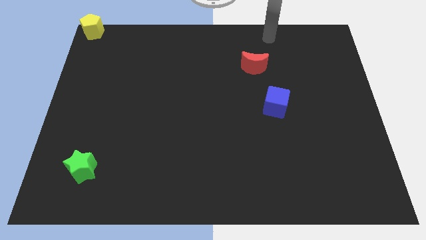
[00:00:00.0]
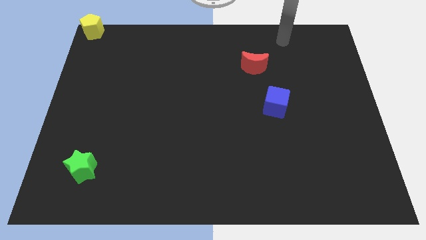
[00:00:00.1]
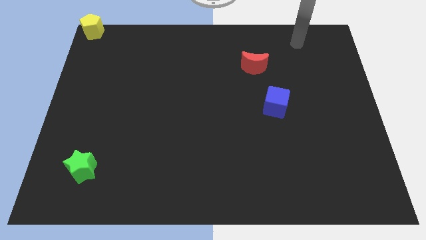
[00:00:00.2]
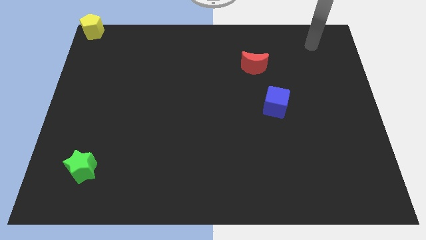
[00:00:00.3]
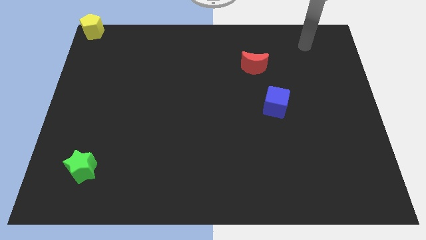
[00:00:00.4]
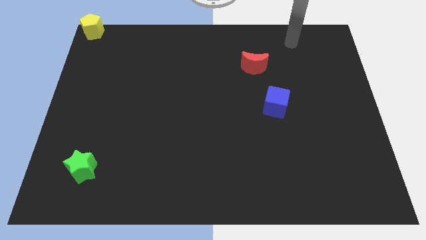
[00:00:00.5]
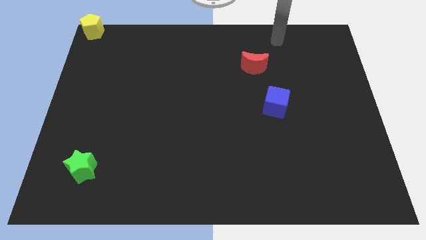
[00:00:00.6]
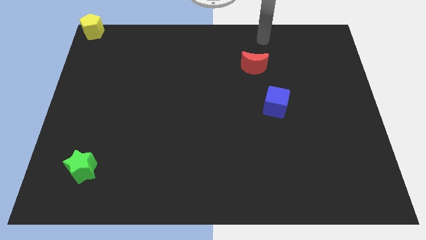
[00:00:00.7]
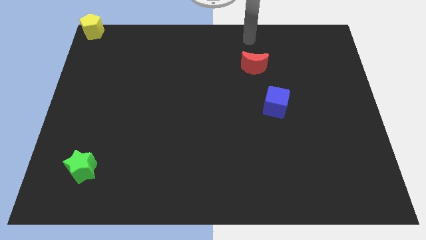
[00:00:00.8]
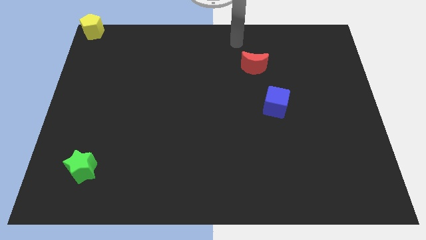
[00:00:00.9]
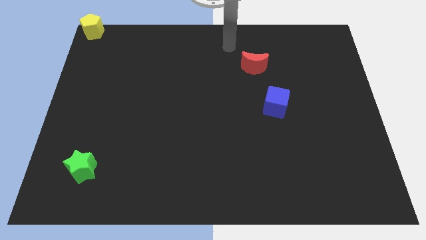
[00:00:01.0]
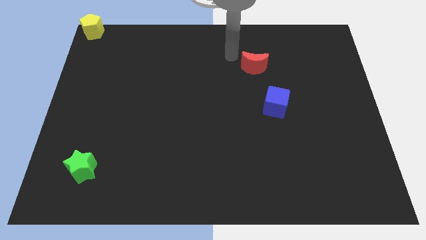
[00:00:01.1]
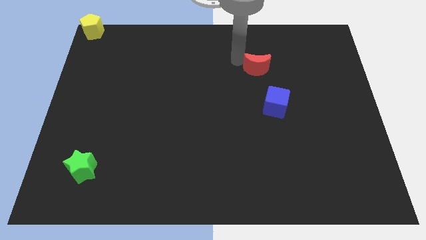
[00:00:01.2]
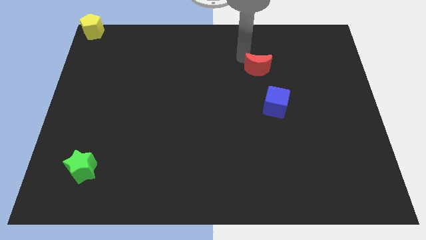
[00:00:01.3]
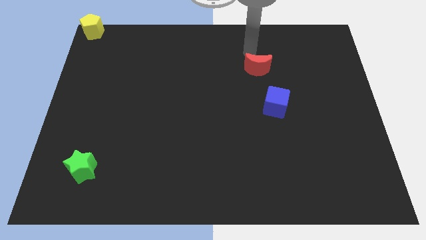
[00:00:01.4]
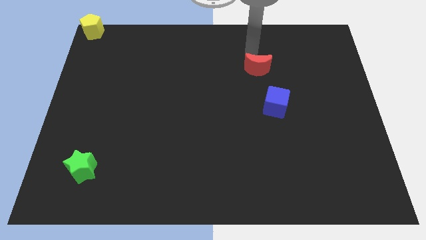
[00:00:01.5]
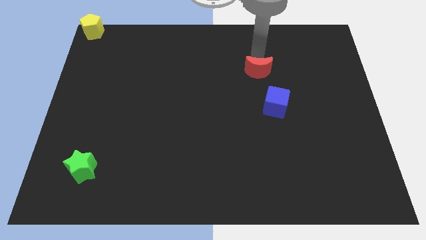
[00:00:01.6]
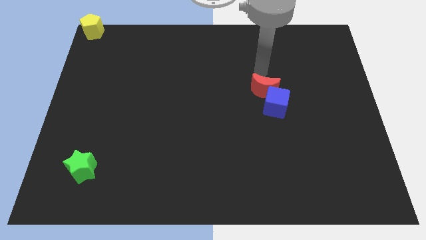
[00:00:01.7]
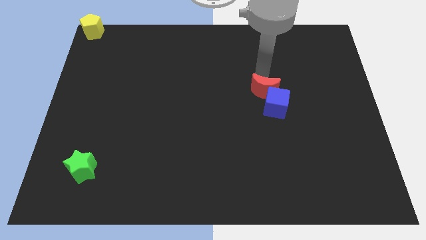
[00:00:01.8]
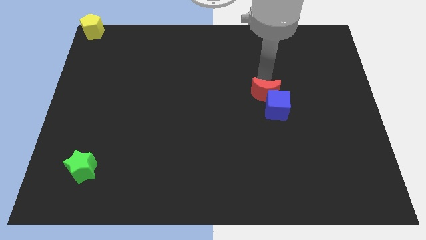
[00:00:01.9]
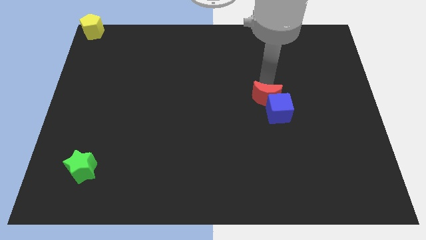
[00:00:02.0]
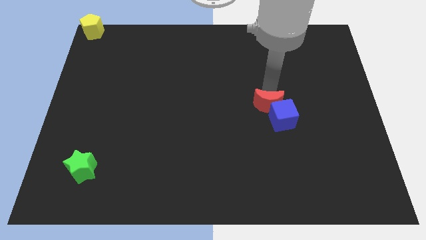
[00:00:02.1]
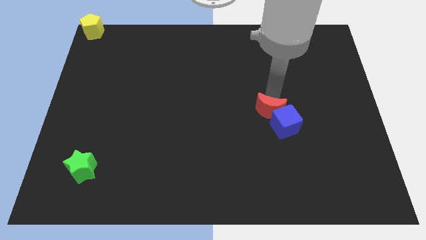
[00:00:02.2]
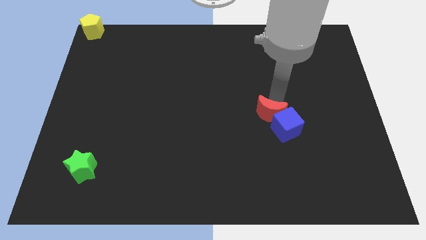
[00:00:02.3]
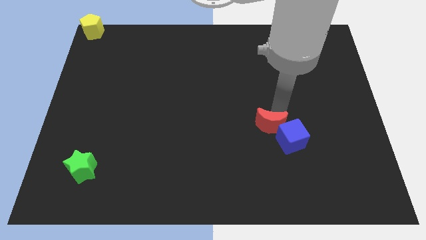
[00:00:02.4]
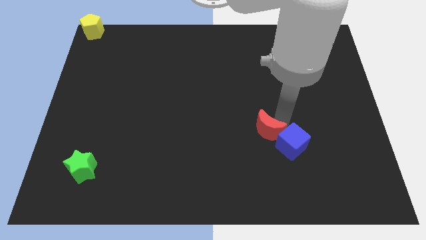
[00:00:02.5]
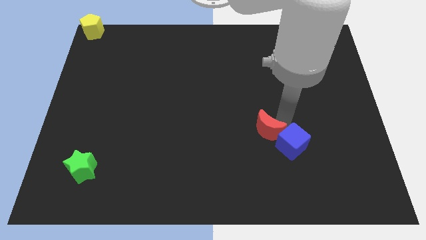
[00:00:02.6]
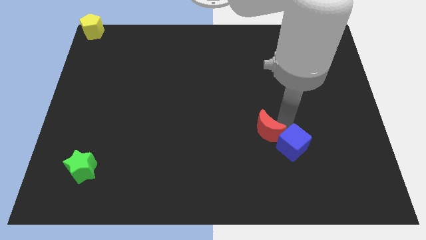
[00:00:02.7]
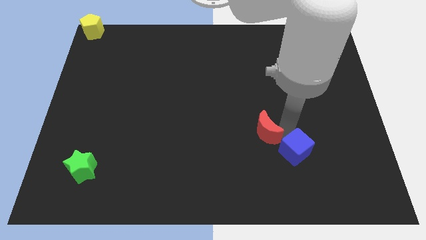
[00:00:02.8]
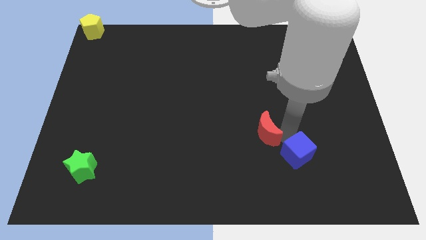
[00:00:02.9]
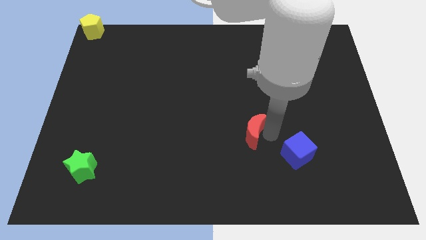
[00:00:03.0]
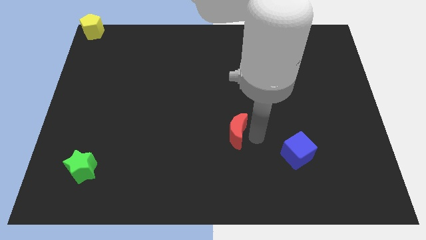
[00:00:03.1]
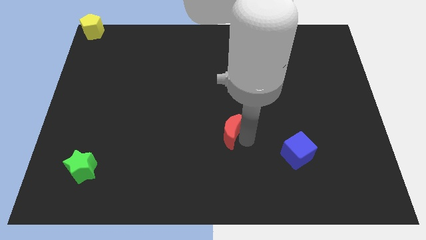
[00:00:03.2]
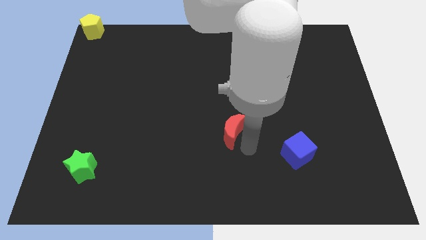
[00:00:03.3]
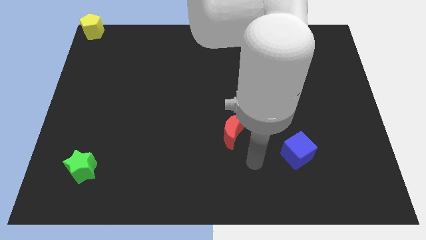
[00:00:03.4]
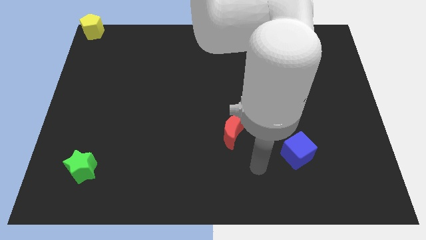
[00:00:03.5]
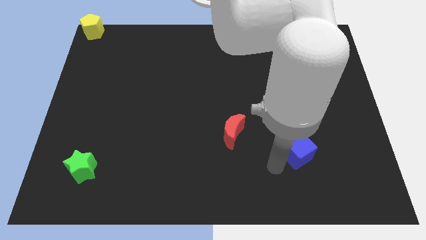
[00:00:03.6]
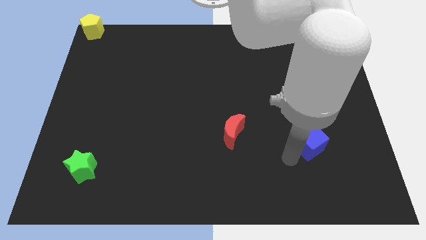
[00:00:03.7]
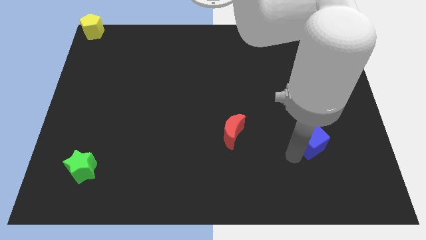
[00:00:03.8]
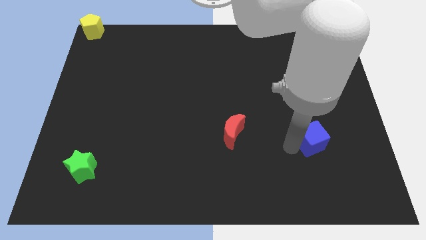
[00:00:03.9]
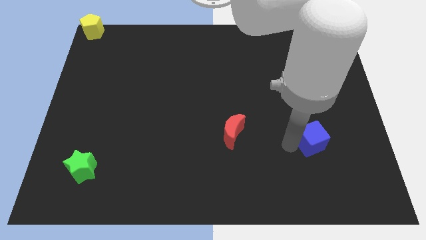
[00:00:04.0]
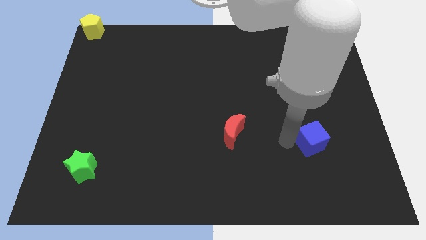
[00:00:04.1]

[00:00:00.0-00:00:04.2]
place the red thing horizontally to the left side of the cube

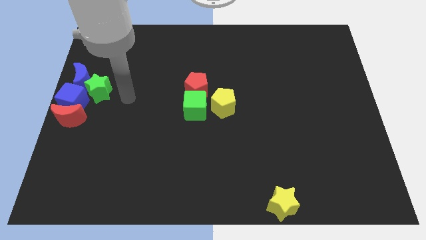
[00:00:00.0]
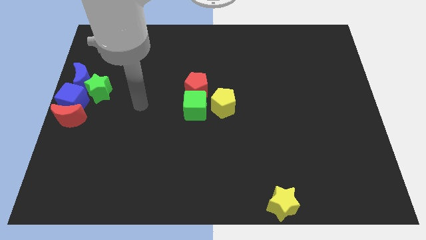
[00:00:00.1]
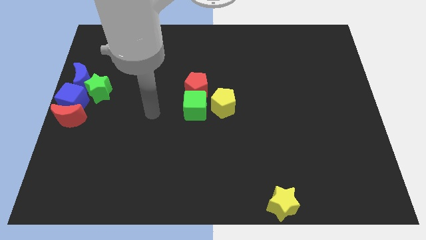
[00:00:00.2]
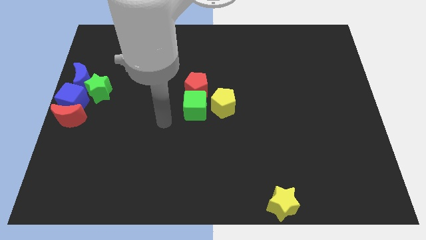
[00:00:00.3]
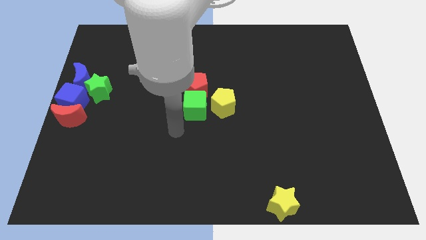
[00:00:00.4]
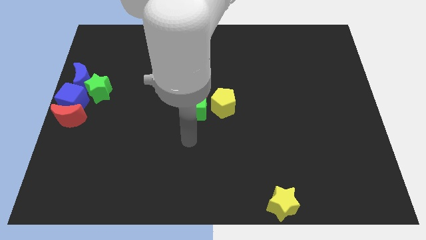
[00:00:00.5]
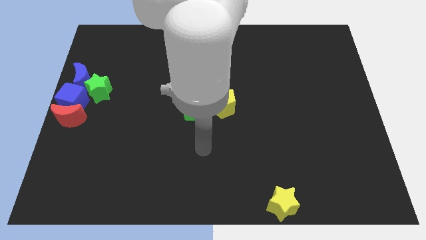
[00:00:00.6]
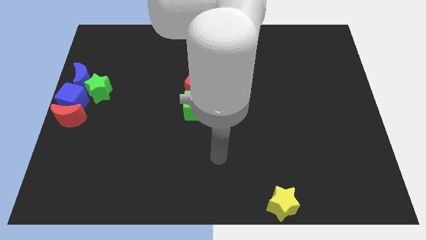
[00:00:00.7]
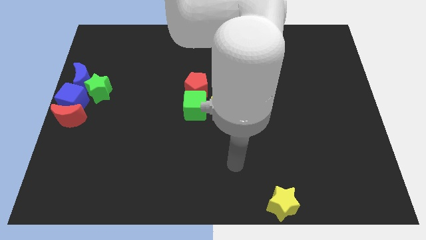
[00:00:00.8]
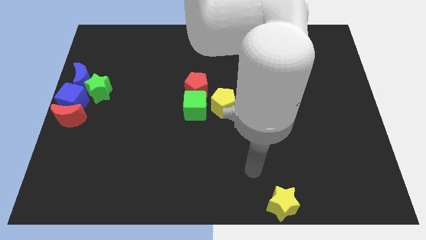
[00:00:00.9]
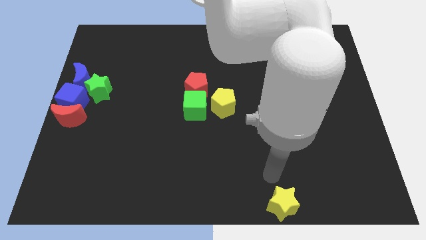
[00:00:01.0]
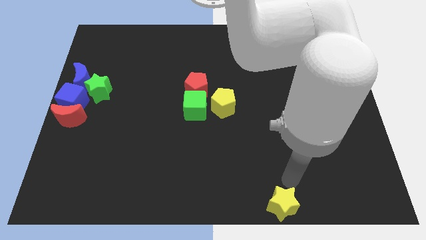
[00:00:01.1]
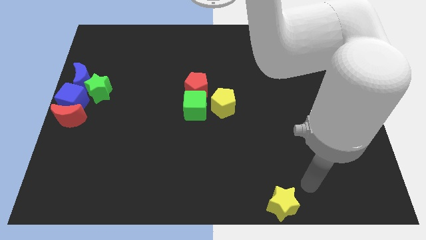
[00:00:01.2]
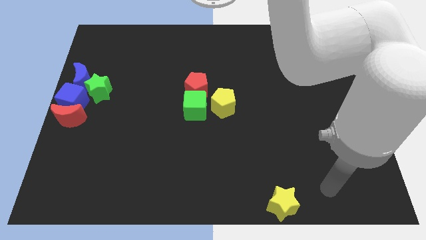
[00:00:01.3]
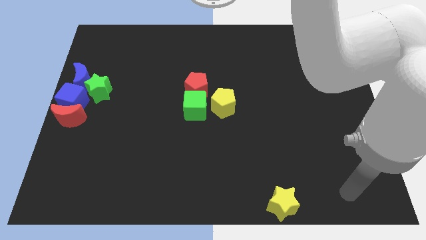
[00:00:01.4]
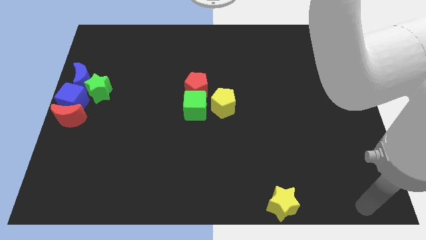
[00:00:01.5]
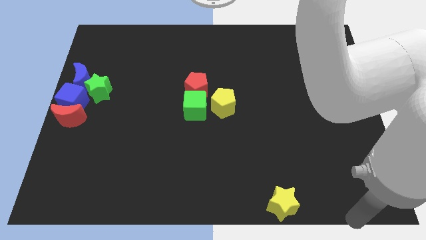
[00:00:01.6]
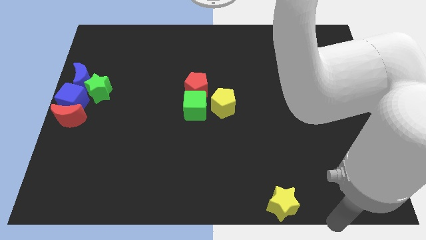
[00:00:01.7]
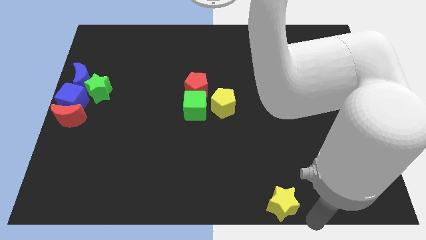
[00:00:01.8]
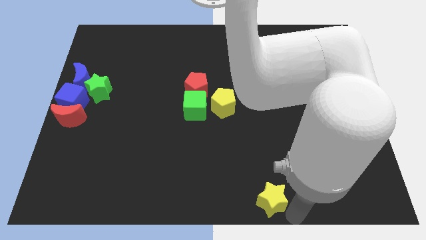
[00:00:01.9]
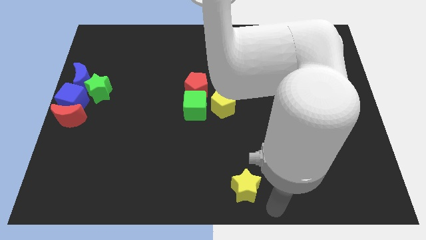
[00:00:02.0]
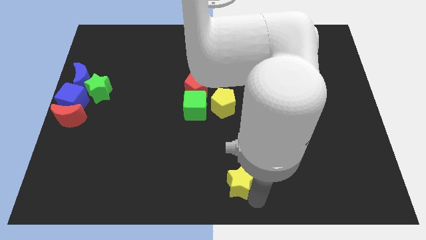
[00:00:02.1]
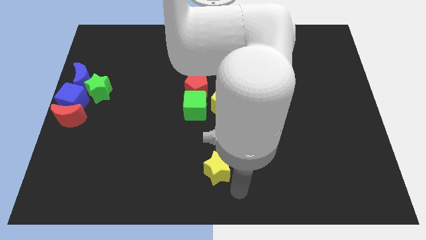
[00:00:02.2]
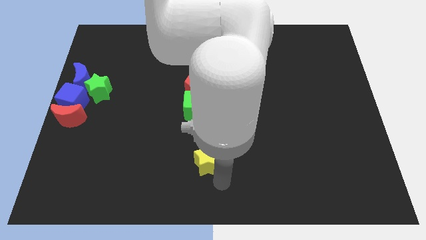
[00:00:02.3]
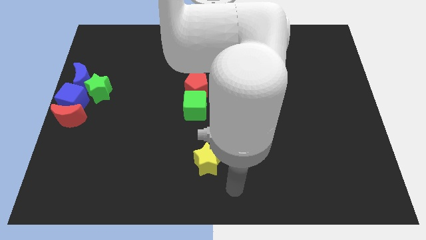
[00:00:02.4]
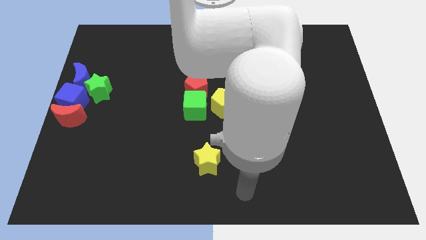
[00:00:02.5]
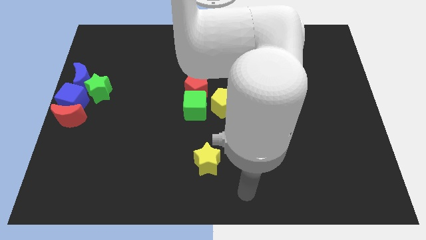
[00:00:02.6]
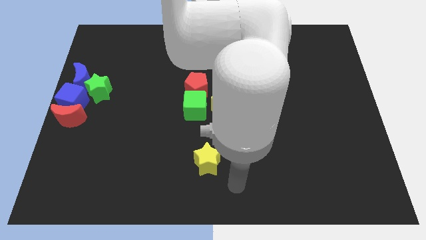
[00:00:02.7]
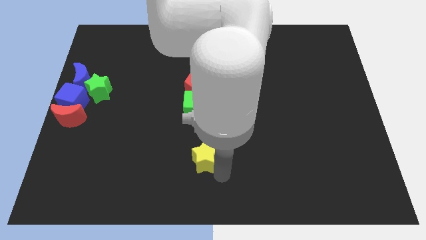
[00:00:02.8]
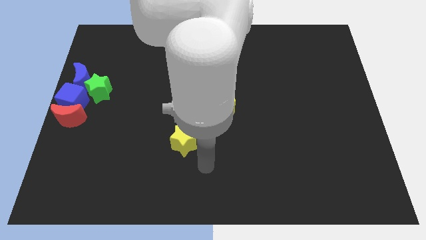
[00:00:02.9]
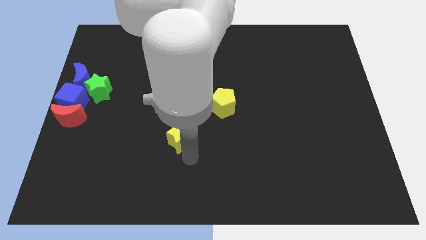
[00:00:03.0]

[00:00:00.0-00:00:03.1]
place the yellow star vertically below the green cube

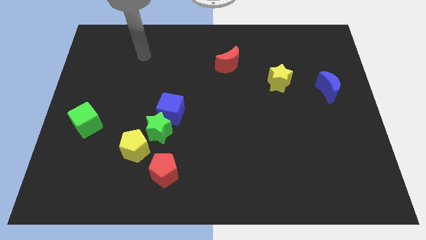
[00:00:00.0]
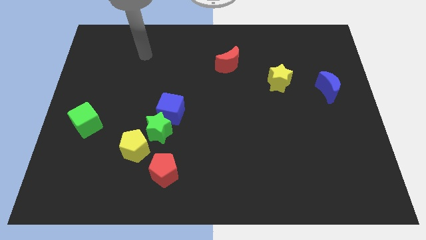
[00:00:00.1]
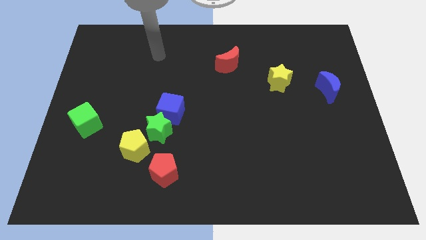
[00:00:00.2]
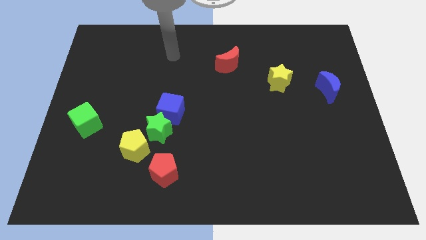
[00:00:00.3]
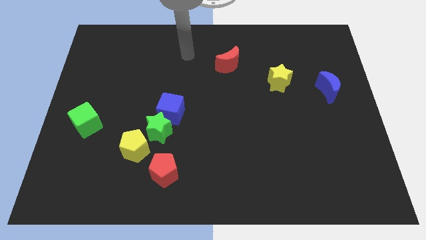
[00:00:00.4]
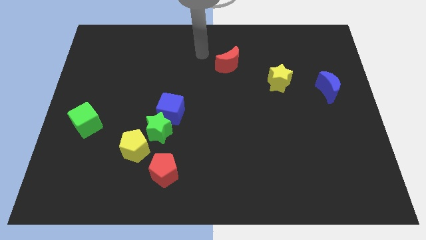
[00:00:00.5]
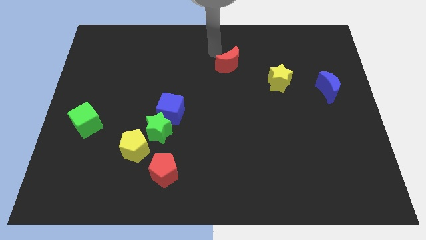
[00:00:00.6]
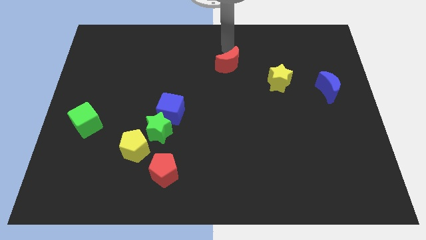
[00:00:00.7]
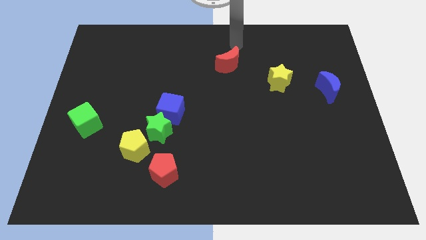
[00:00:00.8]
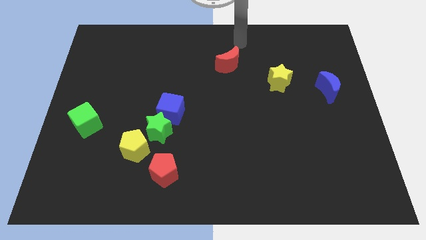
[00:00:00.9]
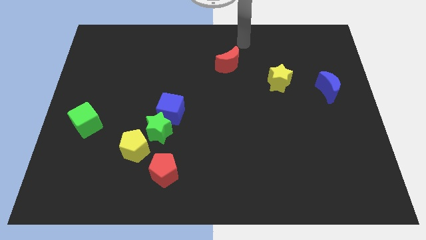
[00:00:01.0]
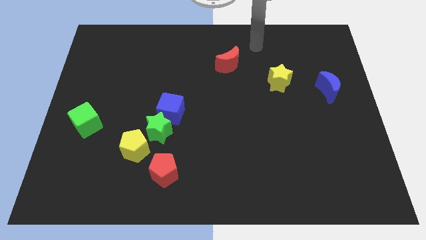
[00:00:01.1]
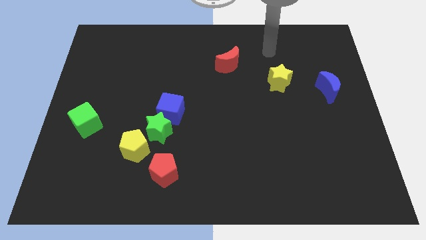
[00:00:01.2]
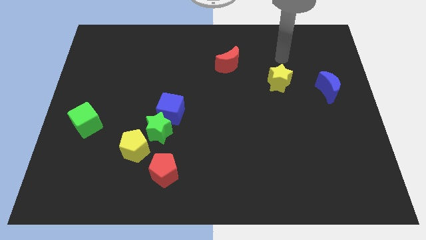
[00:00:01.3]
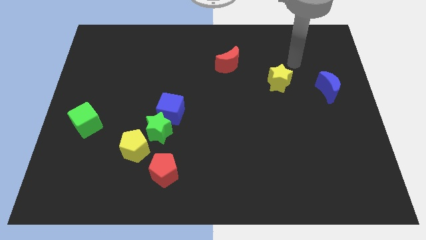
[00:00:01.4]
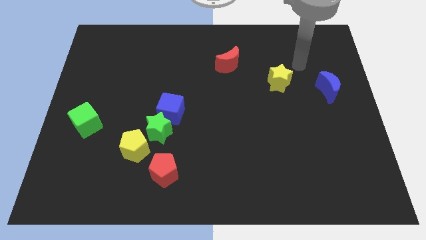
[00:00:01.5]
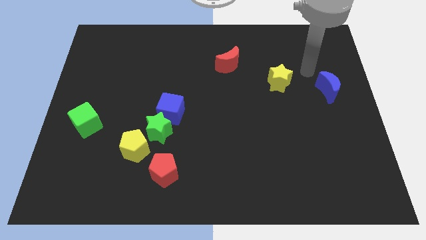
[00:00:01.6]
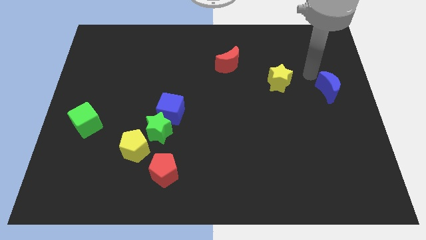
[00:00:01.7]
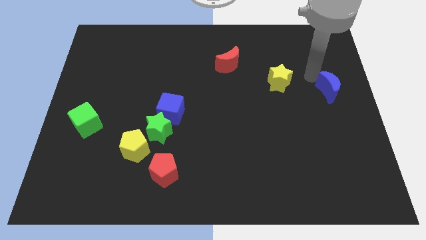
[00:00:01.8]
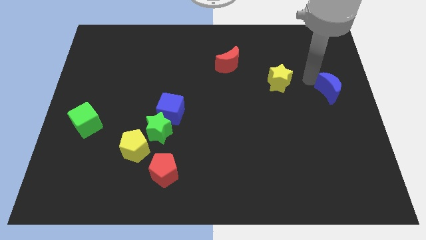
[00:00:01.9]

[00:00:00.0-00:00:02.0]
tap the blue crescent
